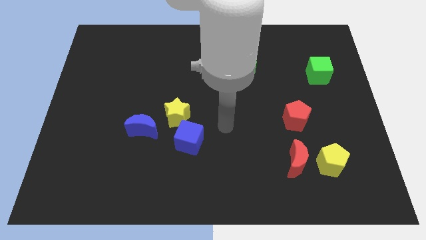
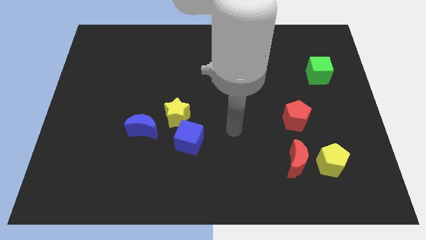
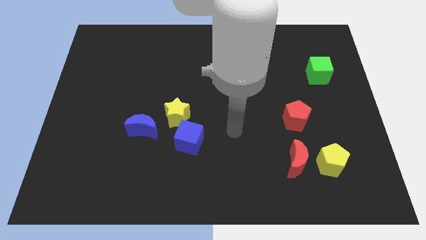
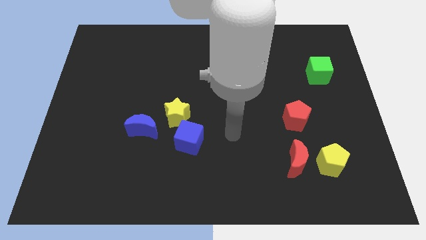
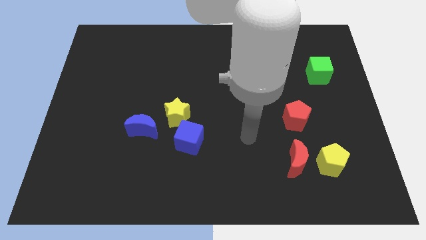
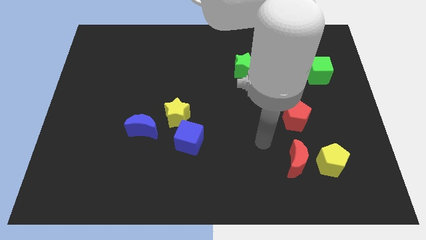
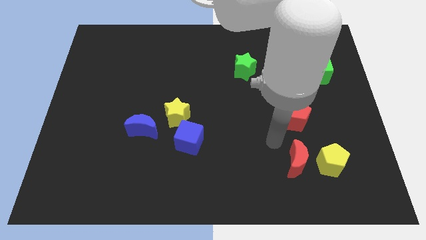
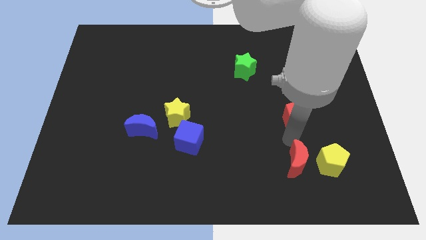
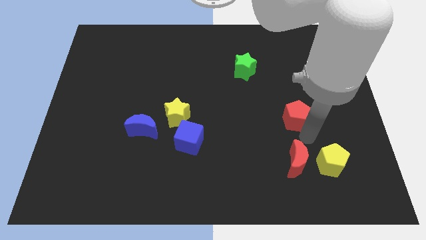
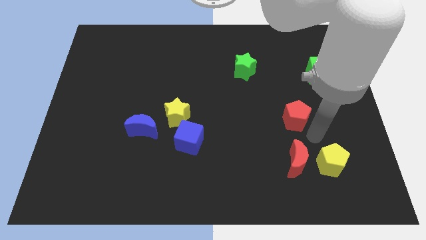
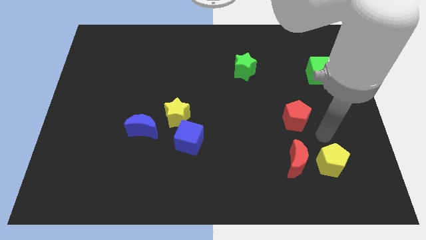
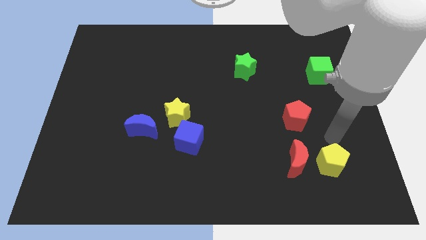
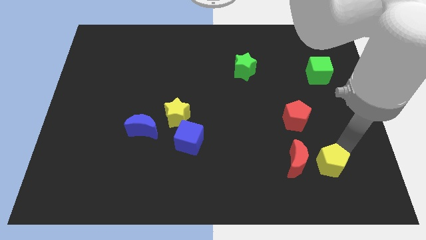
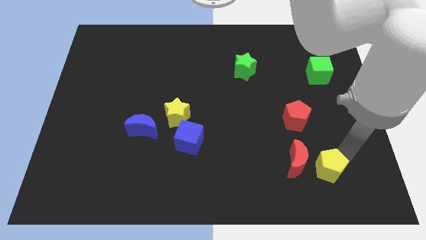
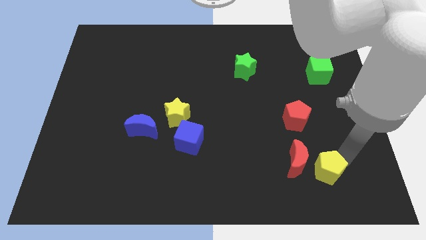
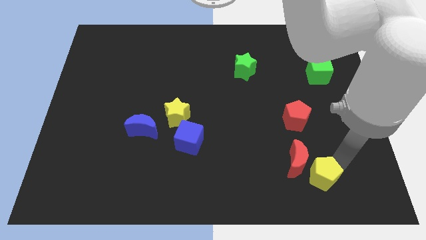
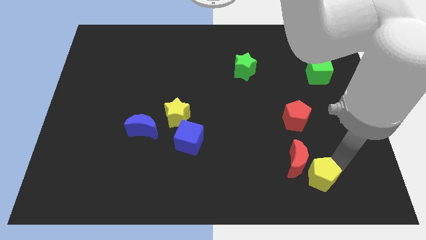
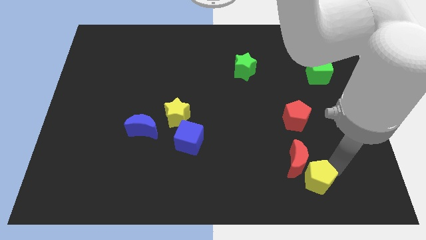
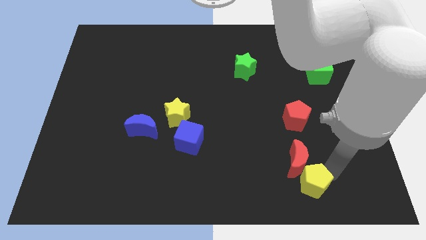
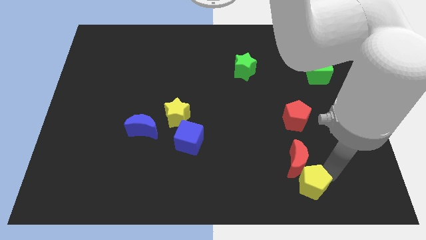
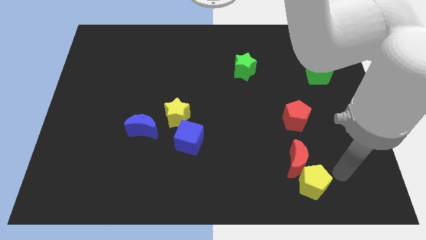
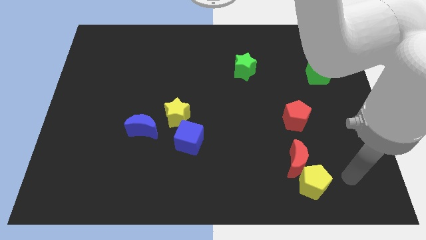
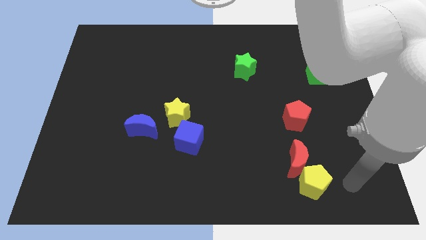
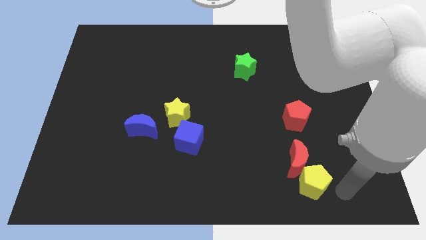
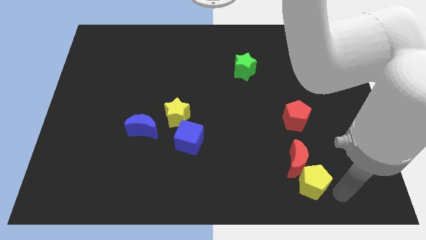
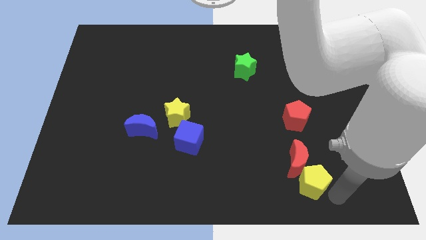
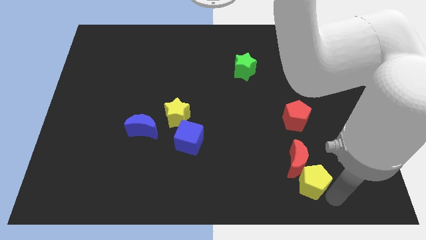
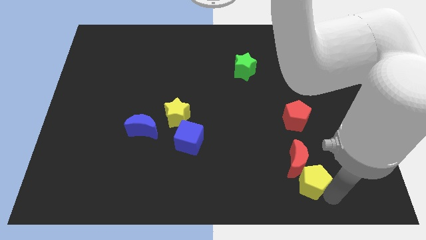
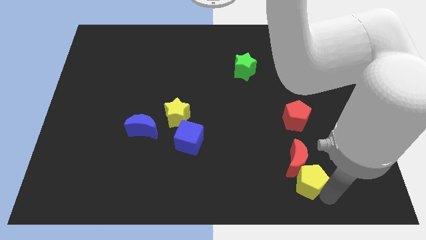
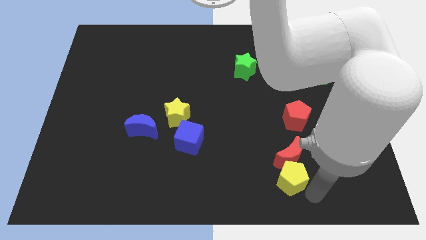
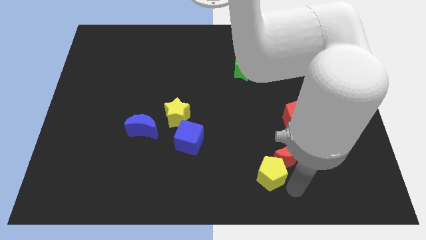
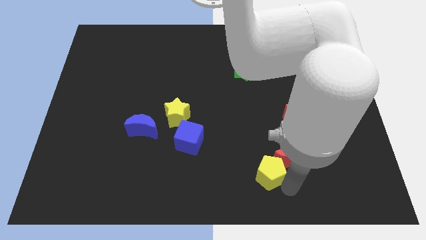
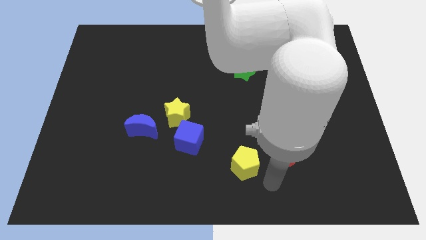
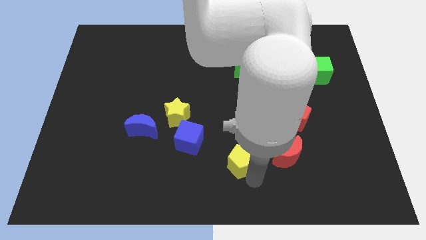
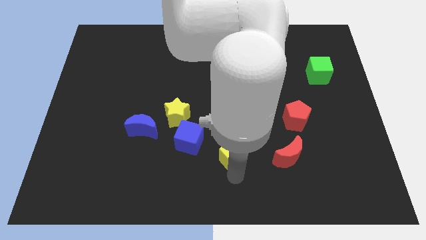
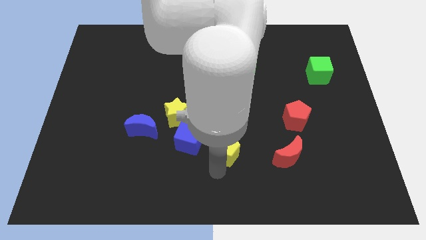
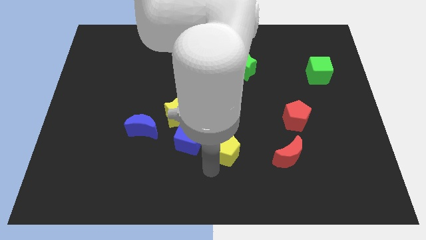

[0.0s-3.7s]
place the yellow pentagon left to the red moon

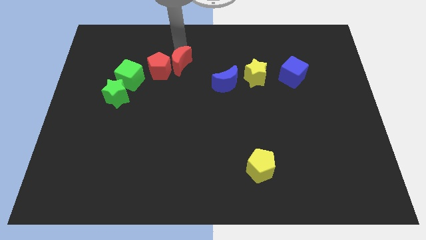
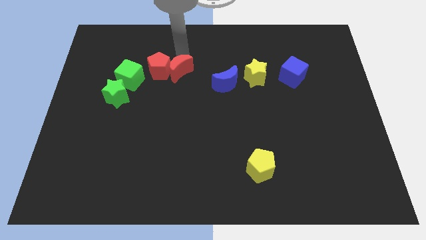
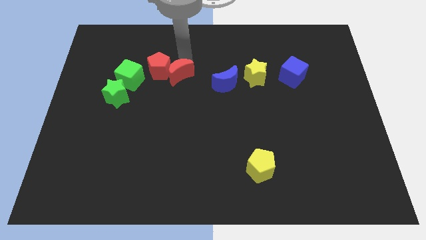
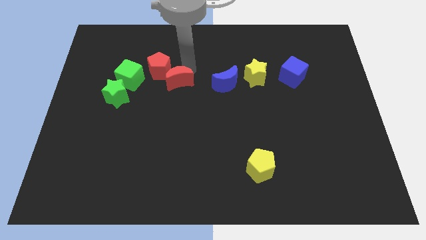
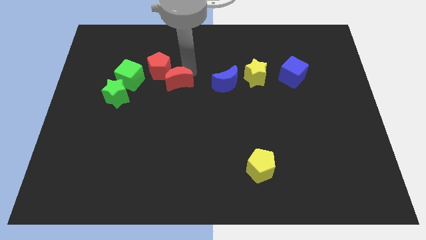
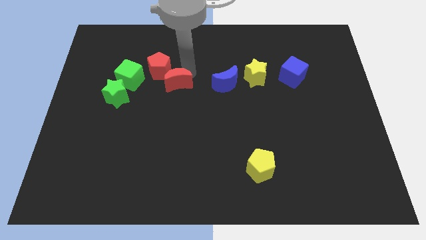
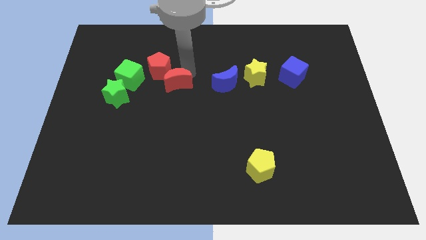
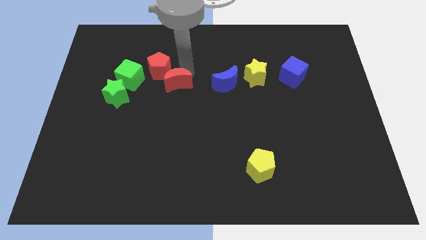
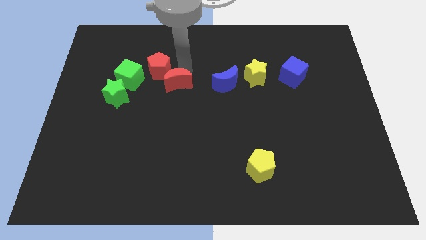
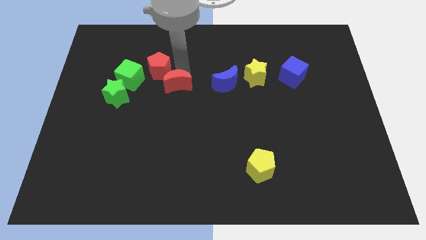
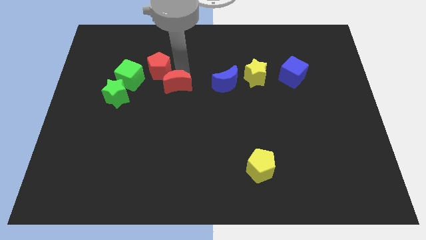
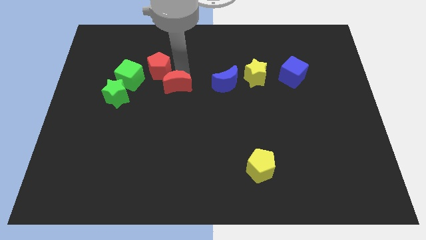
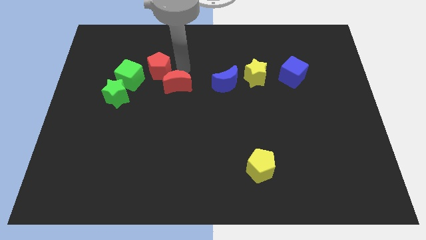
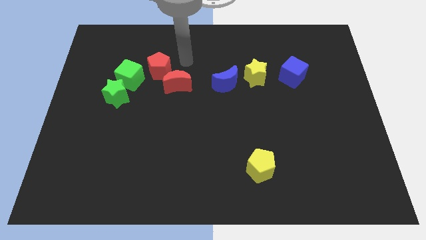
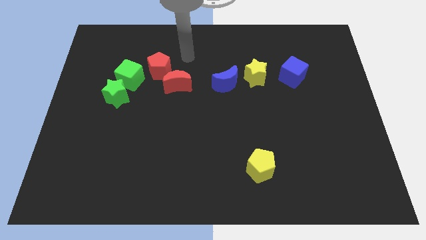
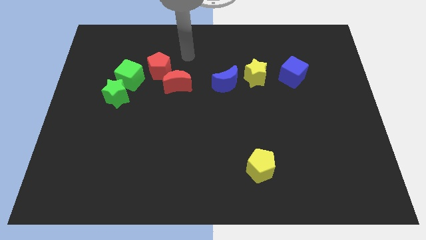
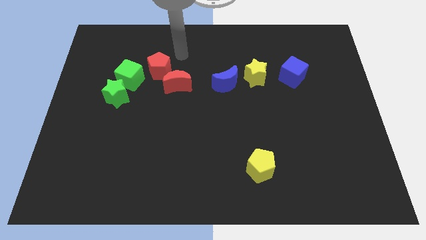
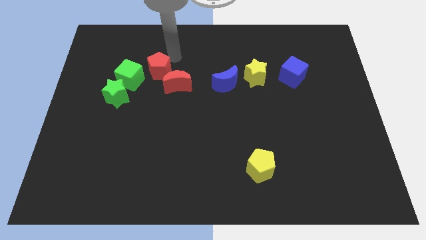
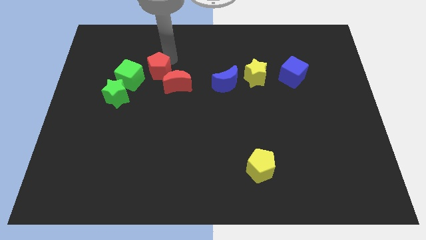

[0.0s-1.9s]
slightly move the red moon downwards

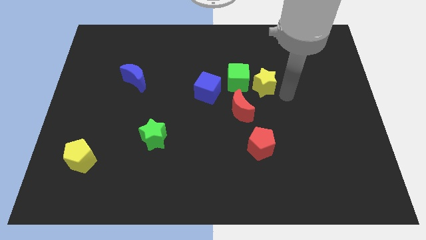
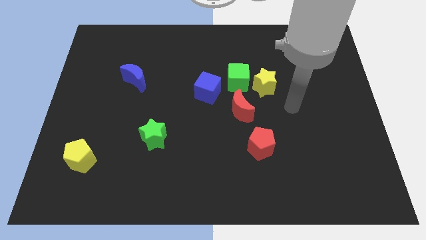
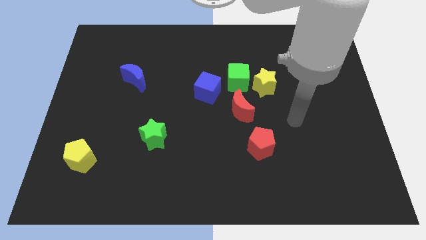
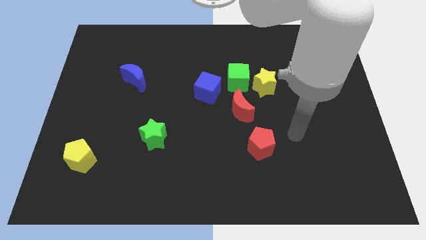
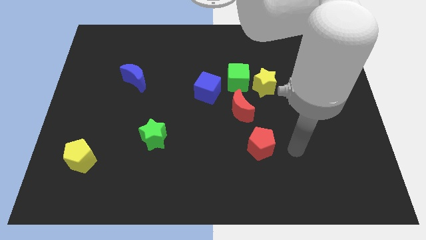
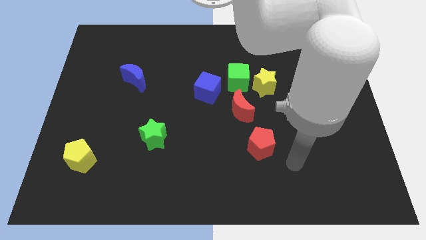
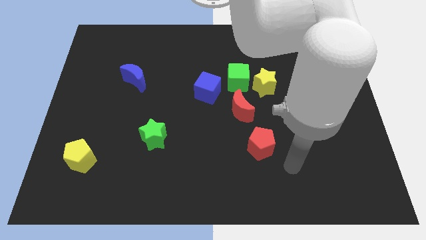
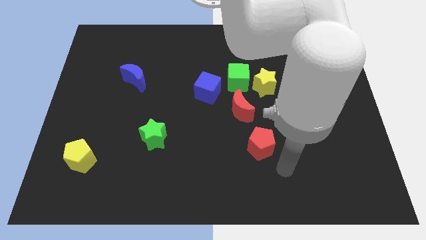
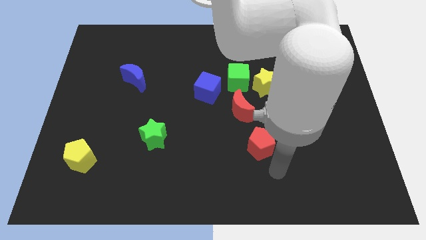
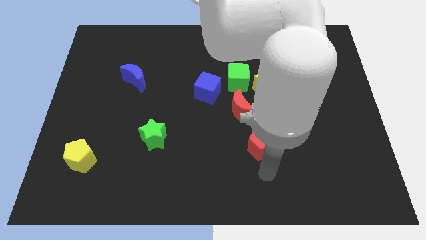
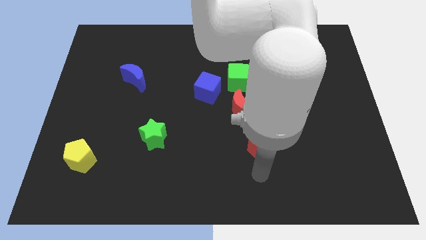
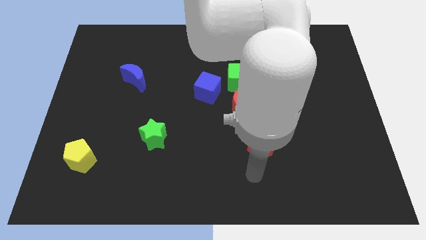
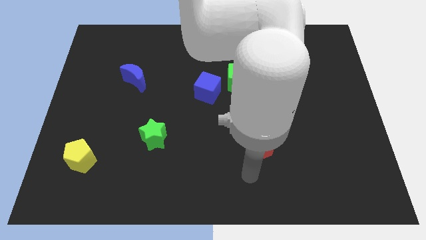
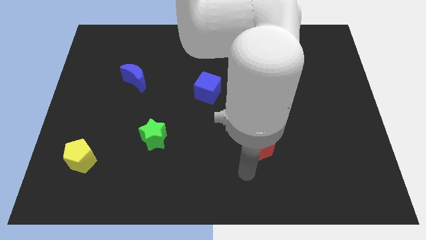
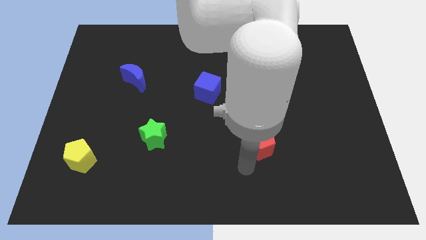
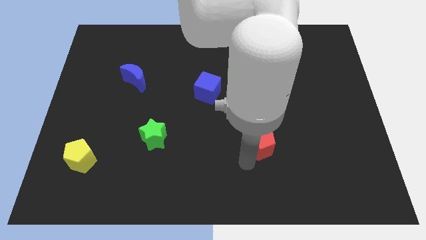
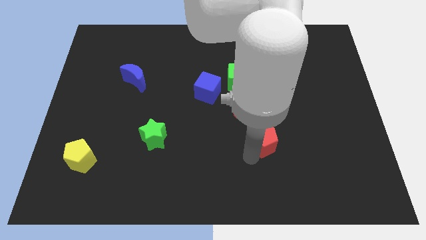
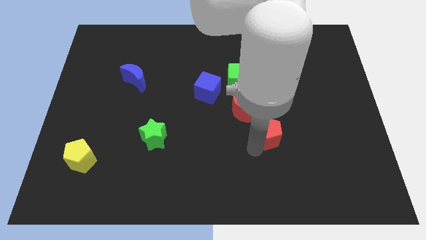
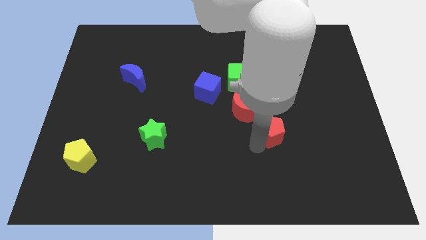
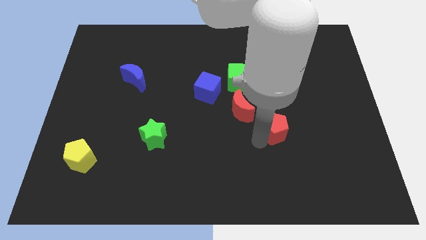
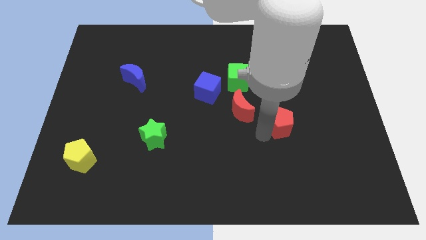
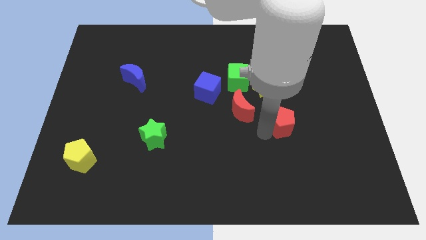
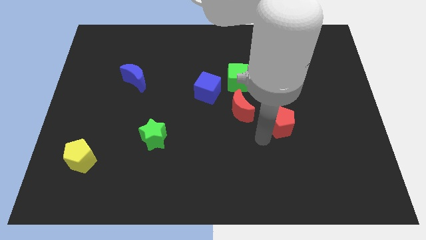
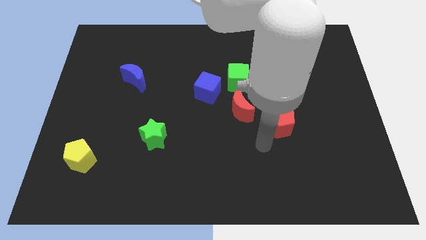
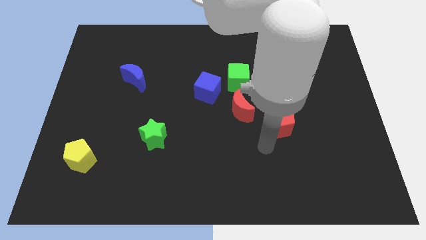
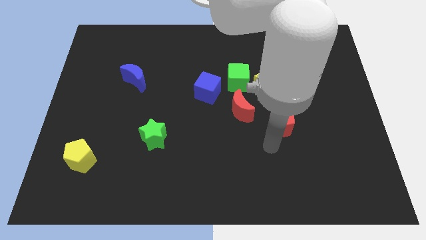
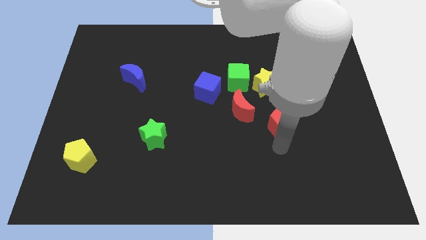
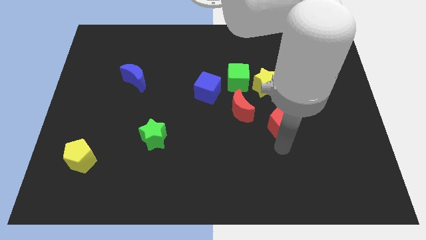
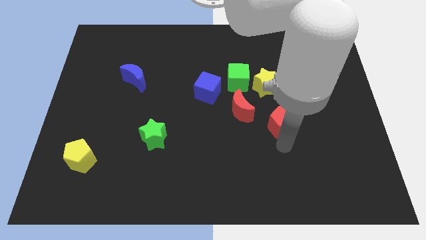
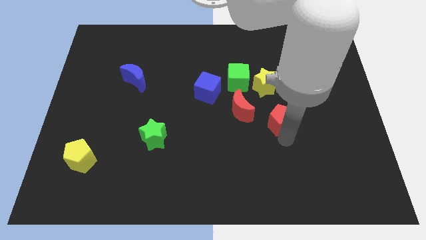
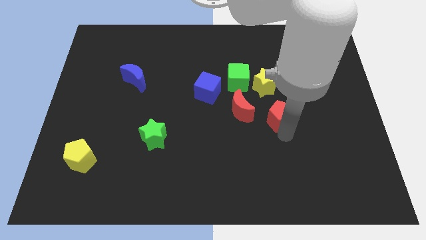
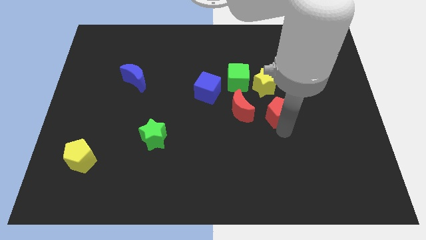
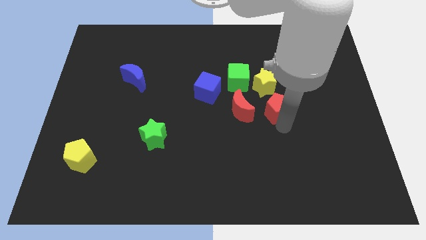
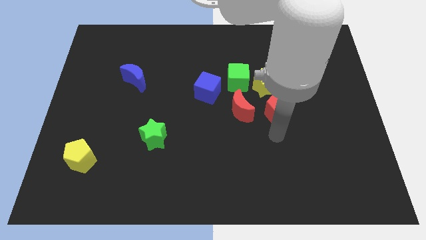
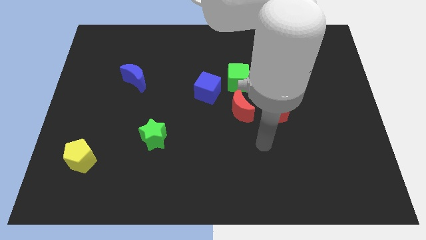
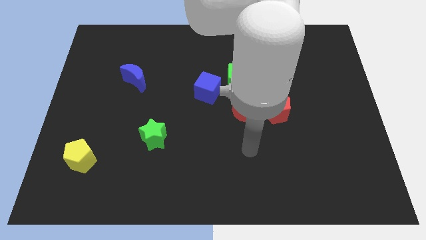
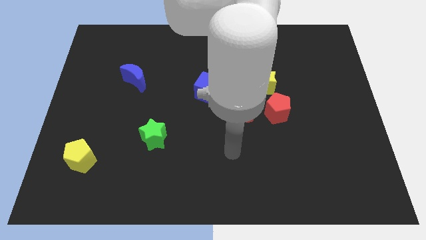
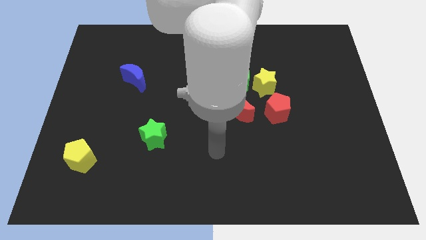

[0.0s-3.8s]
move the red pentagon parallel right to the red crescent
